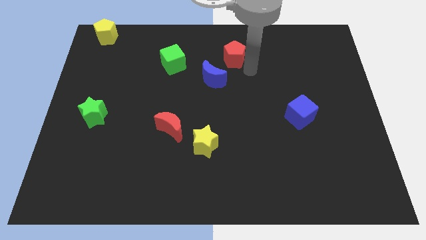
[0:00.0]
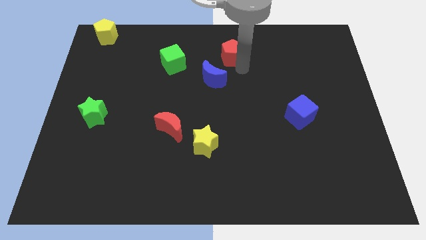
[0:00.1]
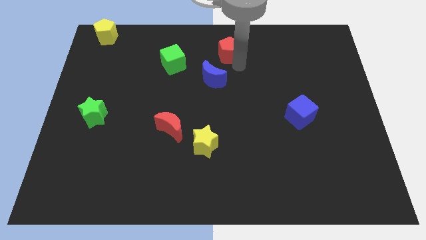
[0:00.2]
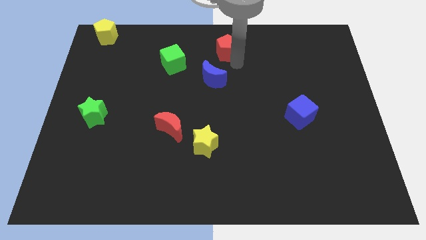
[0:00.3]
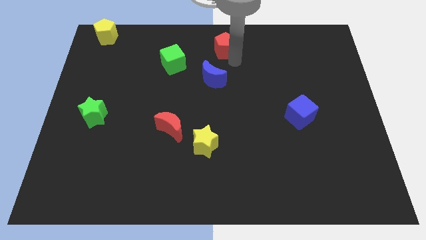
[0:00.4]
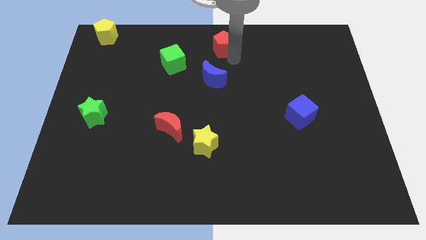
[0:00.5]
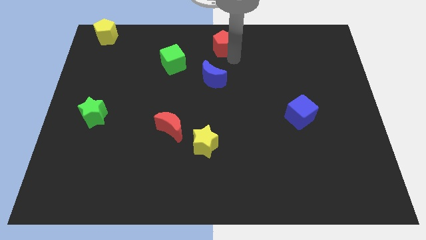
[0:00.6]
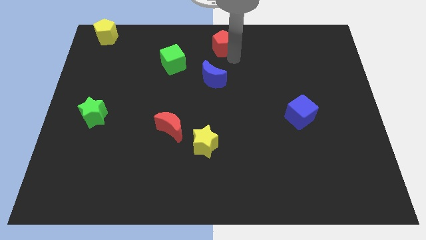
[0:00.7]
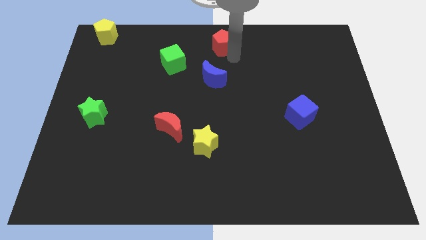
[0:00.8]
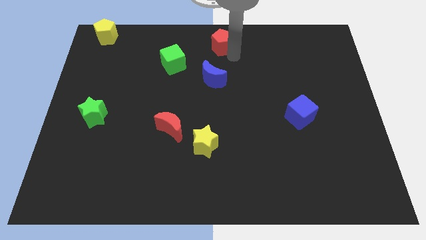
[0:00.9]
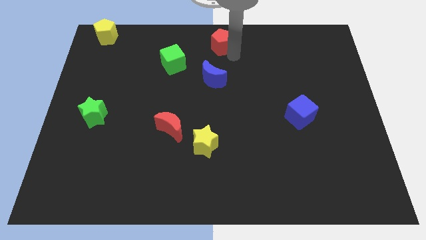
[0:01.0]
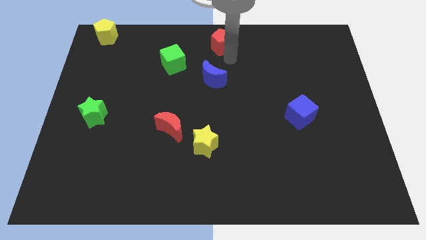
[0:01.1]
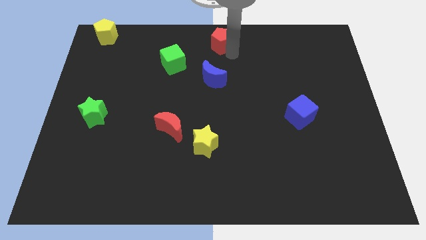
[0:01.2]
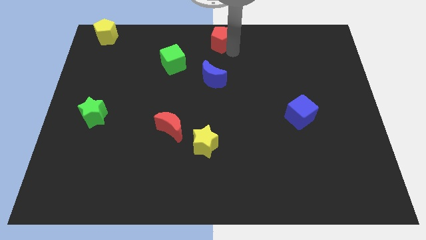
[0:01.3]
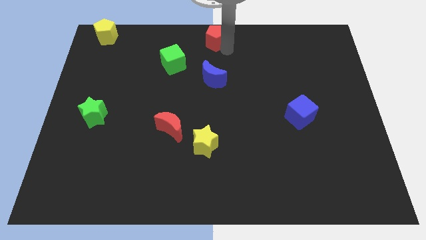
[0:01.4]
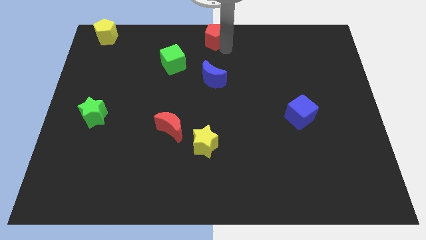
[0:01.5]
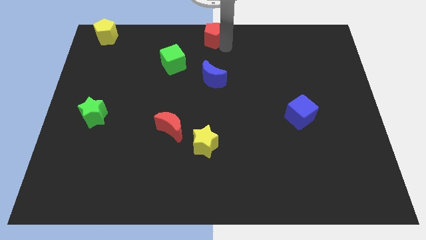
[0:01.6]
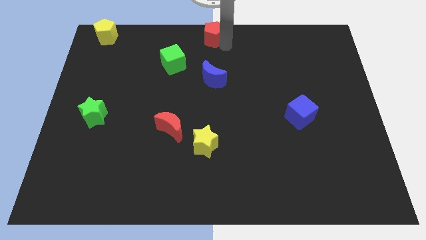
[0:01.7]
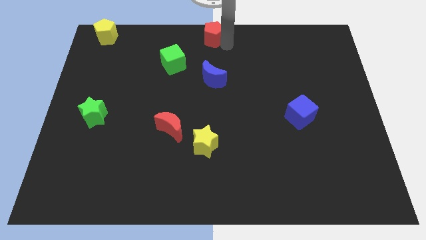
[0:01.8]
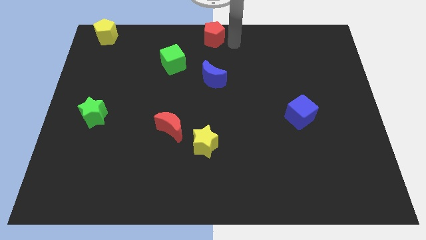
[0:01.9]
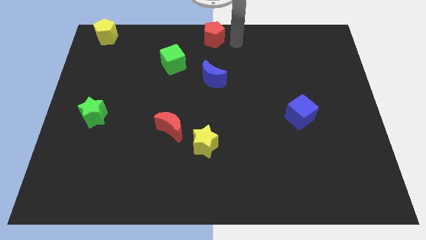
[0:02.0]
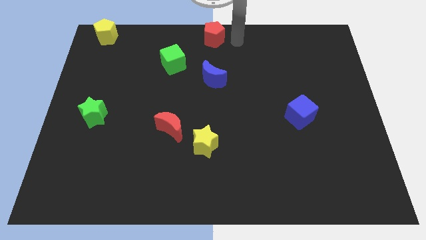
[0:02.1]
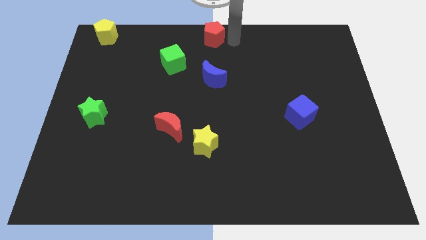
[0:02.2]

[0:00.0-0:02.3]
push the red pentagon towards top center of the board

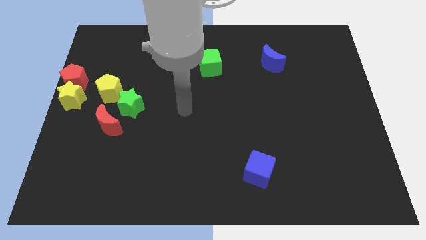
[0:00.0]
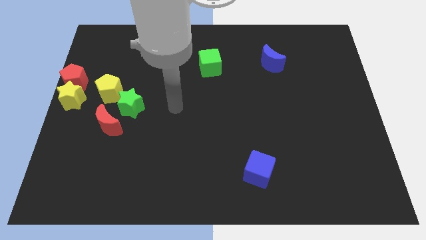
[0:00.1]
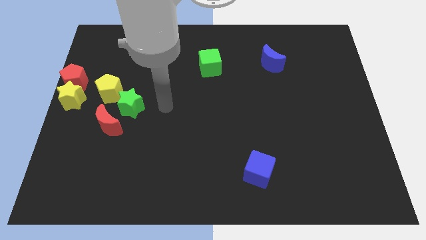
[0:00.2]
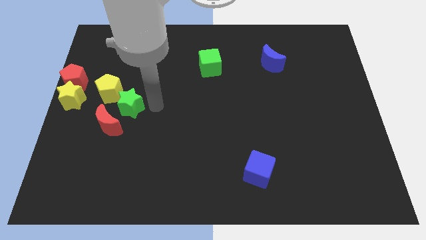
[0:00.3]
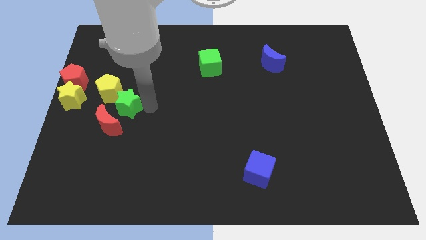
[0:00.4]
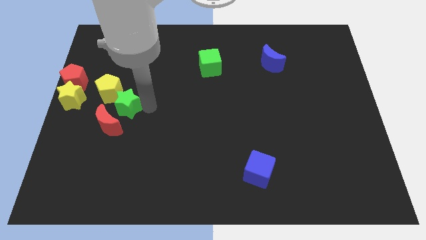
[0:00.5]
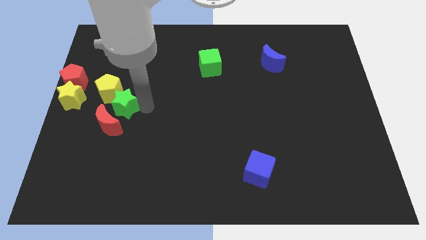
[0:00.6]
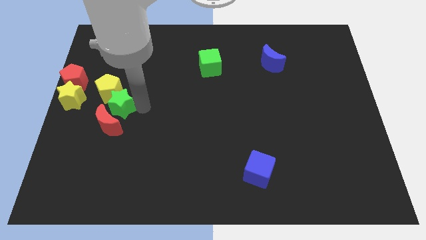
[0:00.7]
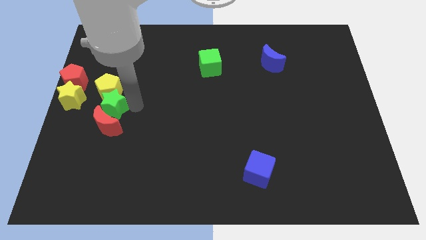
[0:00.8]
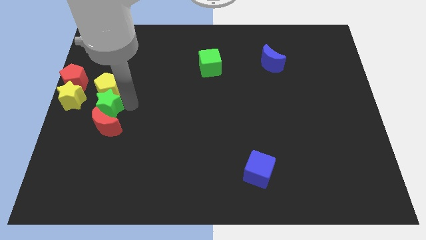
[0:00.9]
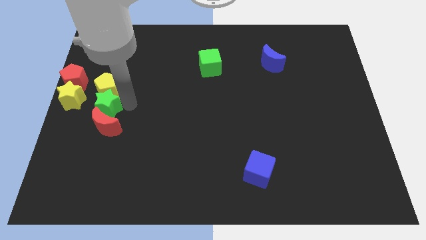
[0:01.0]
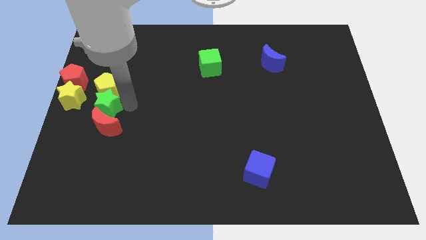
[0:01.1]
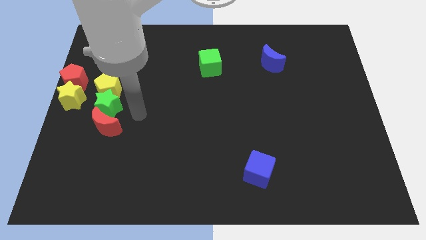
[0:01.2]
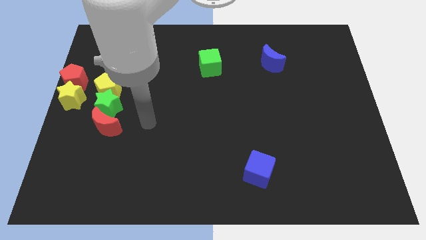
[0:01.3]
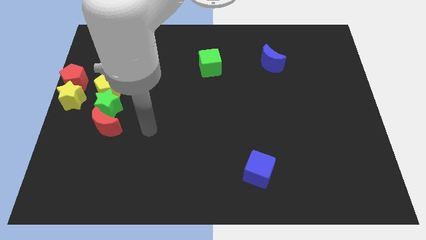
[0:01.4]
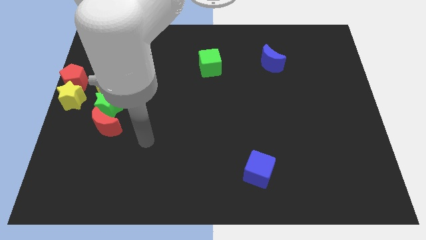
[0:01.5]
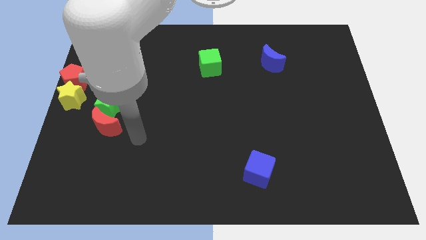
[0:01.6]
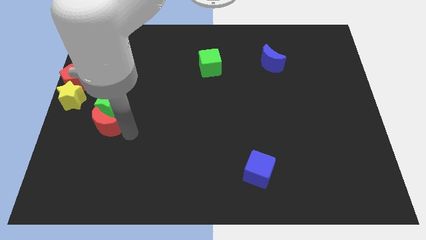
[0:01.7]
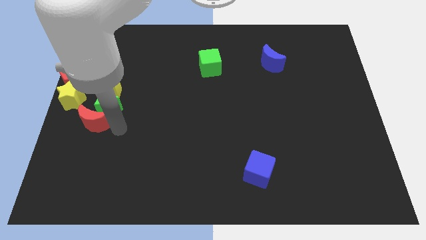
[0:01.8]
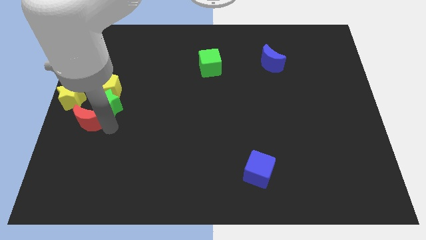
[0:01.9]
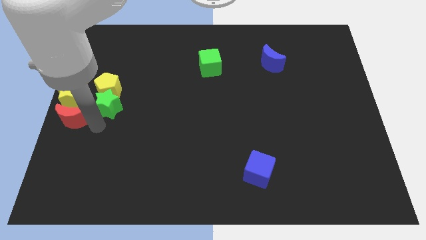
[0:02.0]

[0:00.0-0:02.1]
move the green star below the yellow pentagon

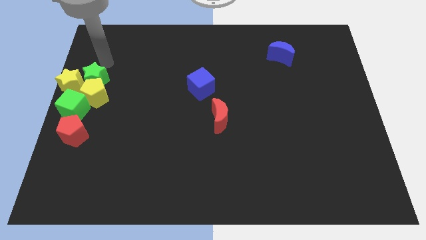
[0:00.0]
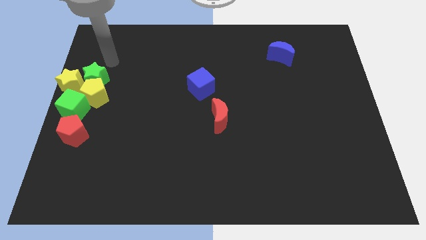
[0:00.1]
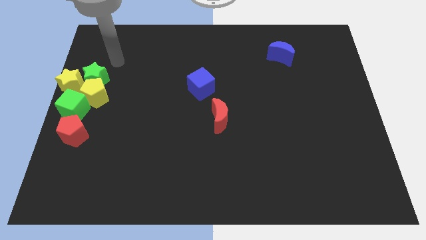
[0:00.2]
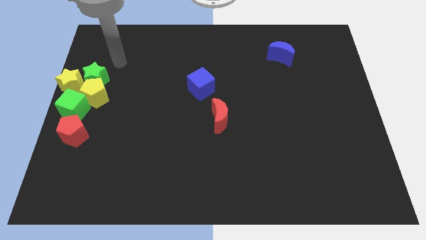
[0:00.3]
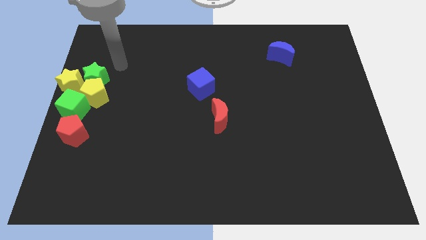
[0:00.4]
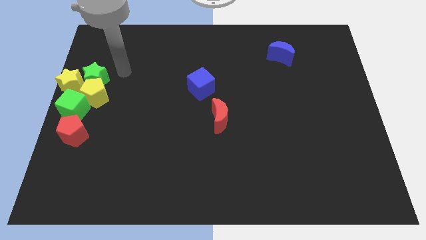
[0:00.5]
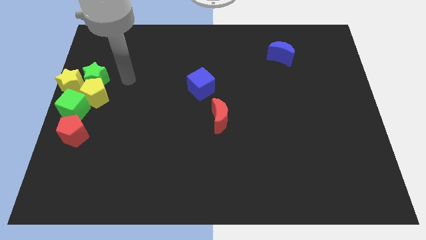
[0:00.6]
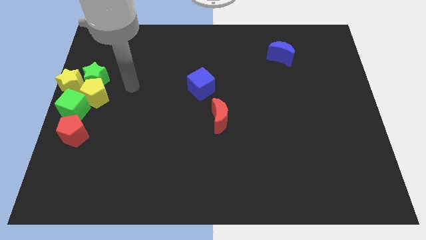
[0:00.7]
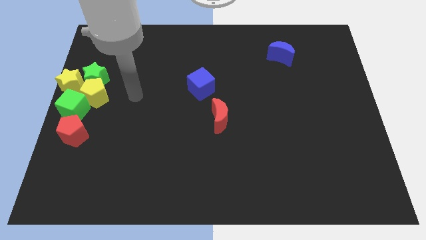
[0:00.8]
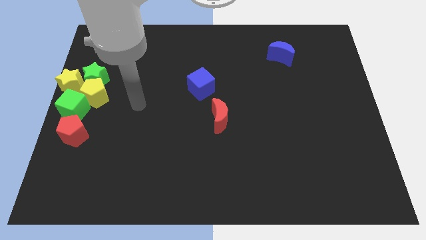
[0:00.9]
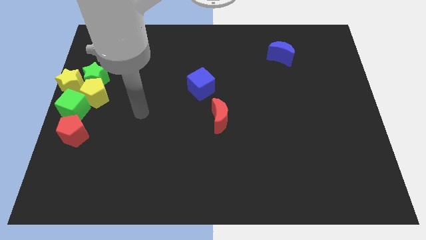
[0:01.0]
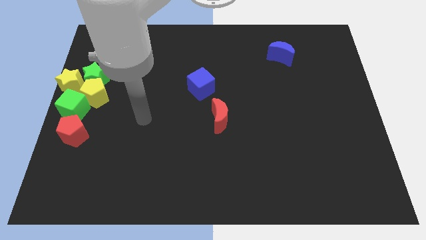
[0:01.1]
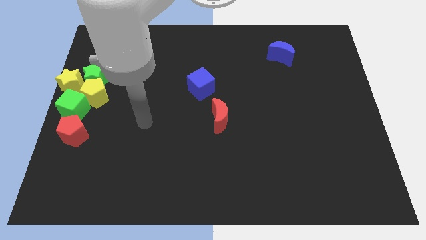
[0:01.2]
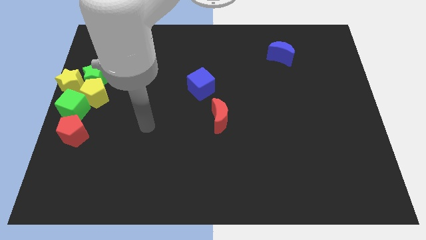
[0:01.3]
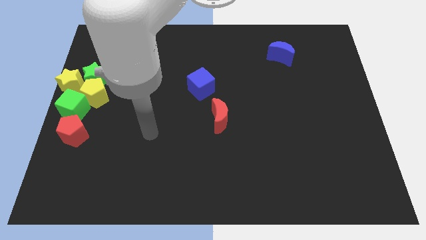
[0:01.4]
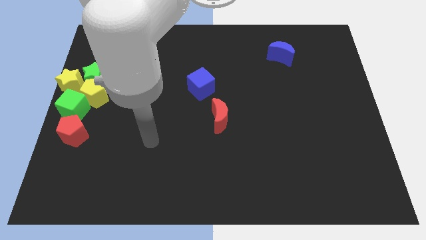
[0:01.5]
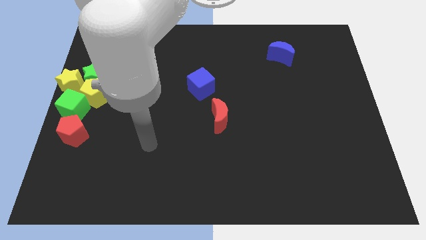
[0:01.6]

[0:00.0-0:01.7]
move your arm away from the green star

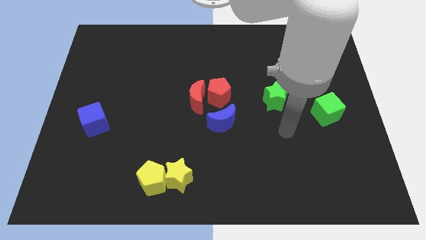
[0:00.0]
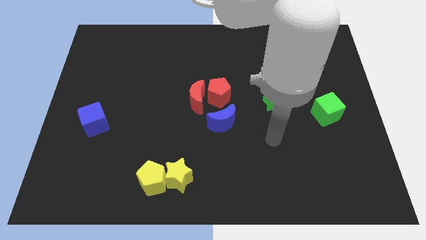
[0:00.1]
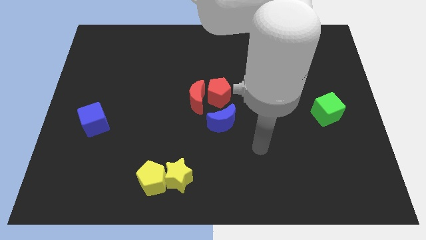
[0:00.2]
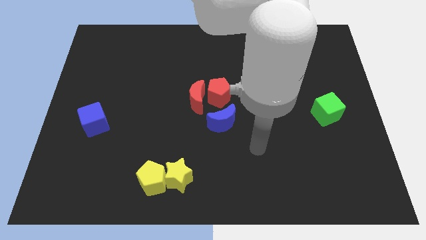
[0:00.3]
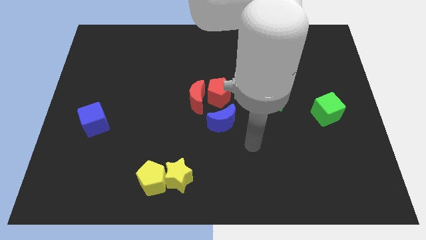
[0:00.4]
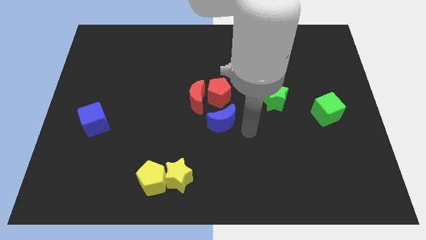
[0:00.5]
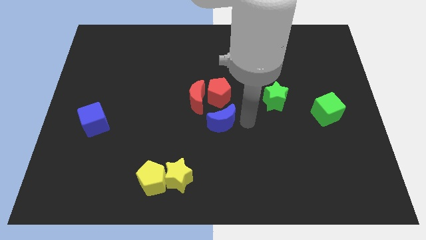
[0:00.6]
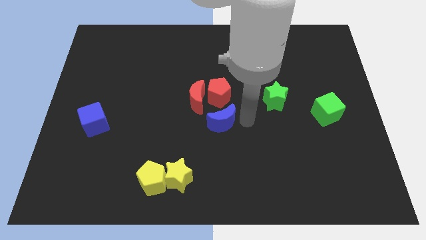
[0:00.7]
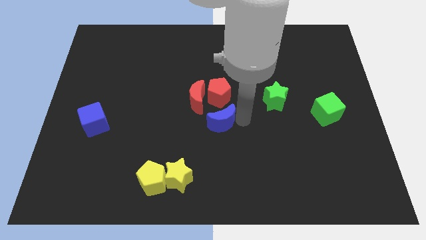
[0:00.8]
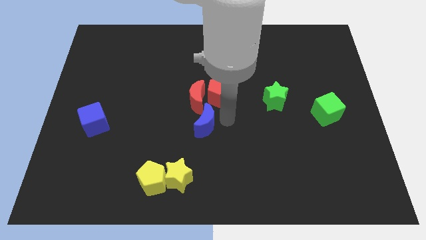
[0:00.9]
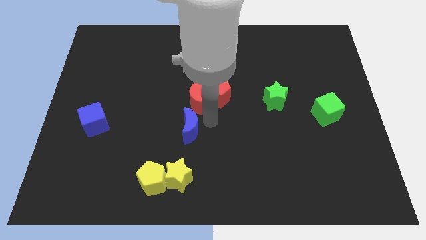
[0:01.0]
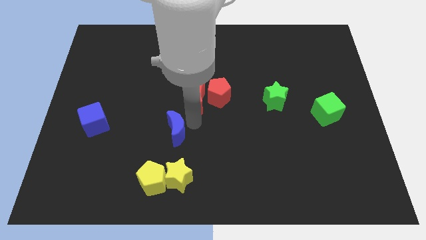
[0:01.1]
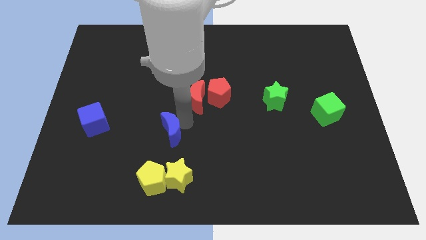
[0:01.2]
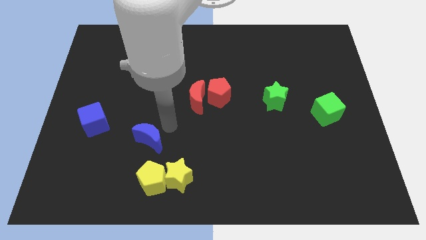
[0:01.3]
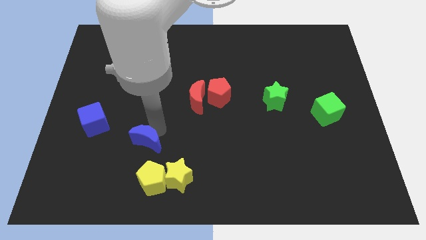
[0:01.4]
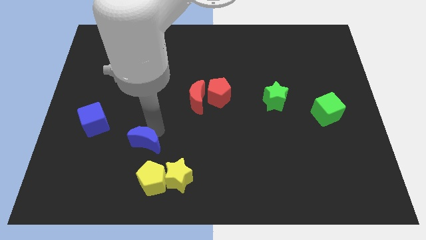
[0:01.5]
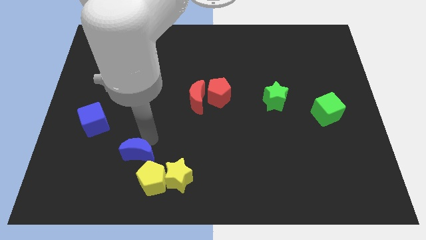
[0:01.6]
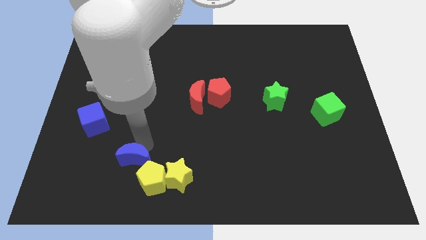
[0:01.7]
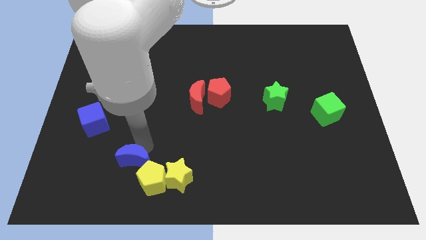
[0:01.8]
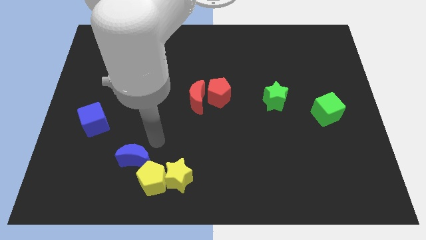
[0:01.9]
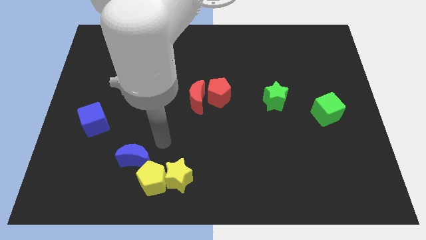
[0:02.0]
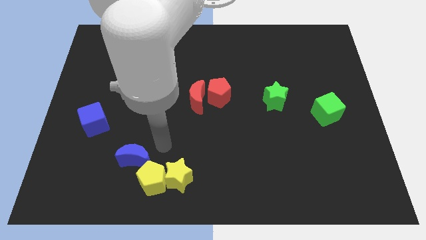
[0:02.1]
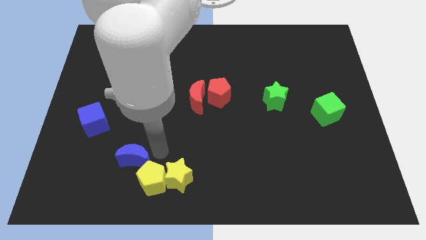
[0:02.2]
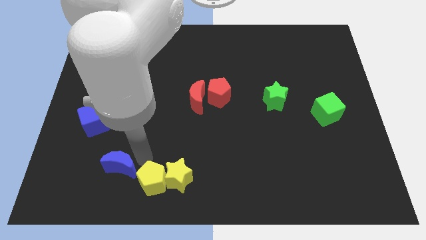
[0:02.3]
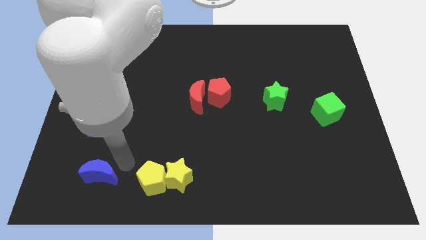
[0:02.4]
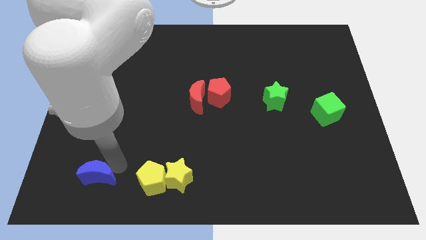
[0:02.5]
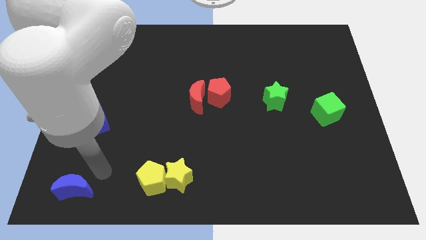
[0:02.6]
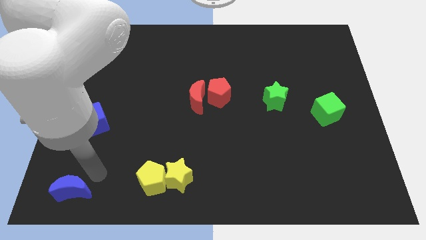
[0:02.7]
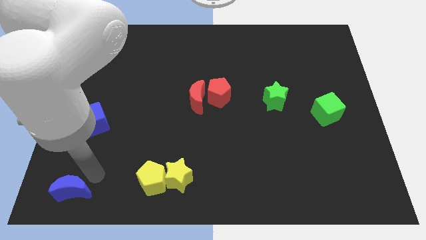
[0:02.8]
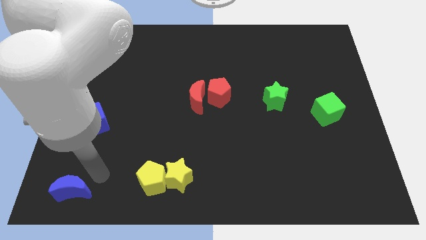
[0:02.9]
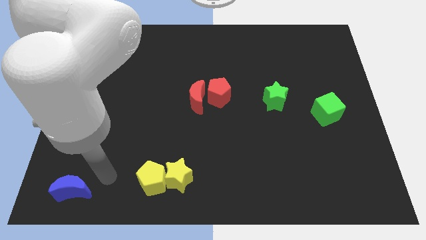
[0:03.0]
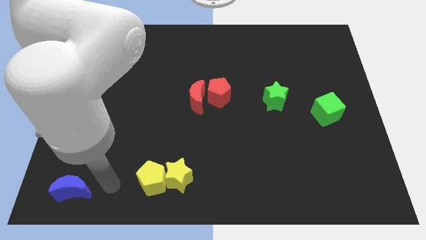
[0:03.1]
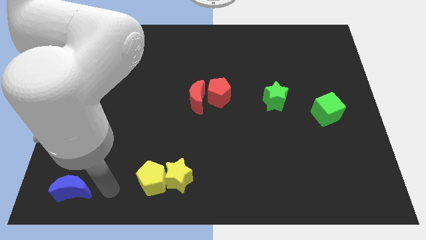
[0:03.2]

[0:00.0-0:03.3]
move blue to the bottom left
